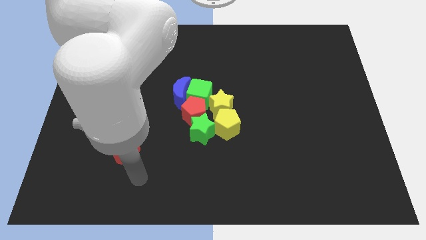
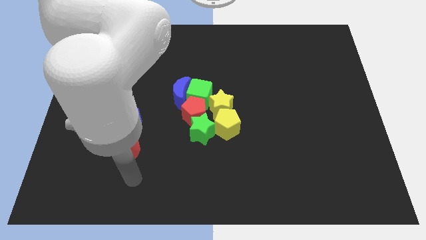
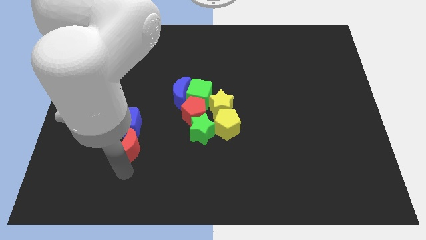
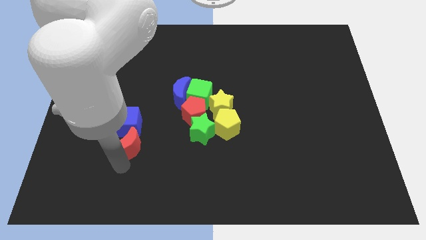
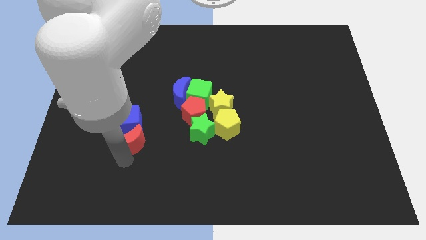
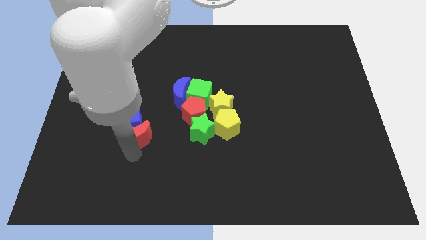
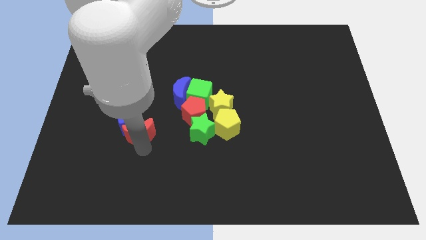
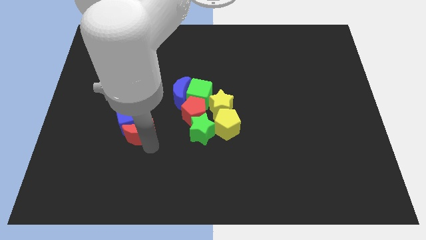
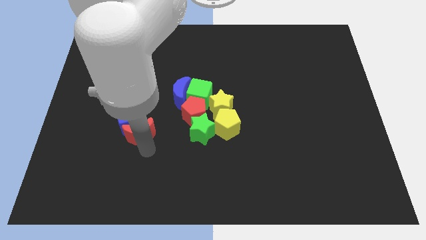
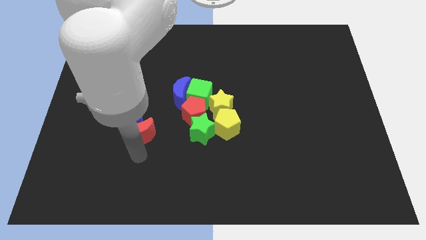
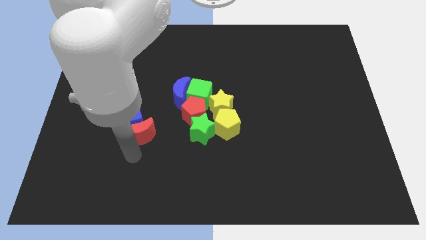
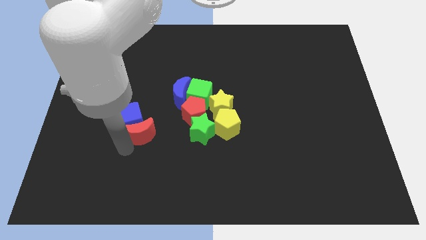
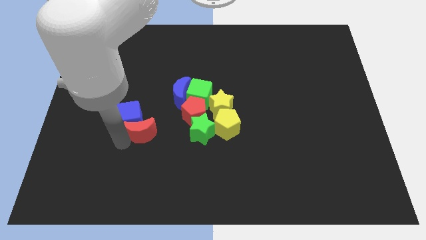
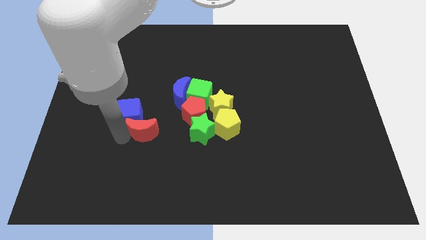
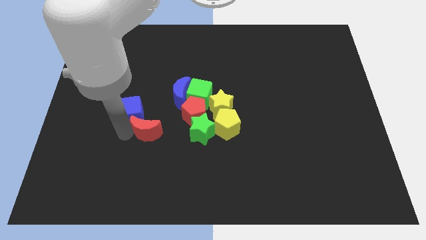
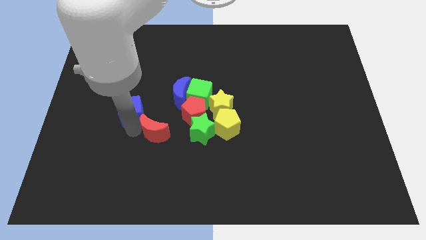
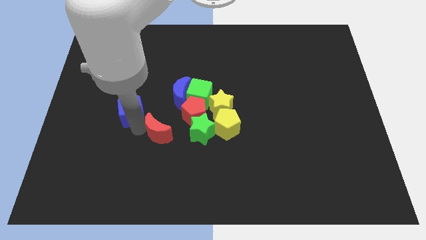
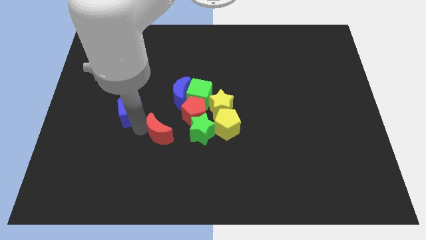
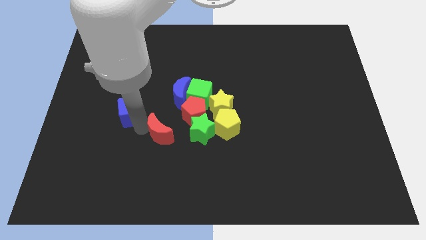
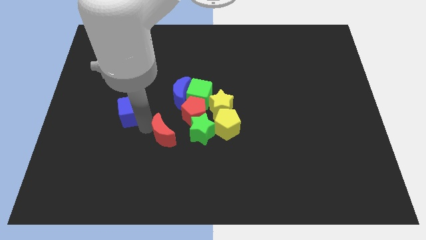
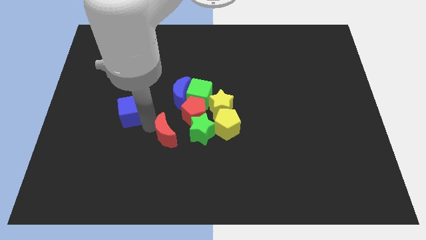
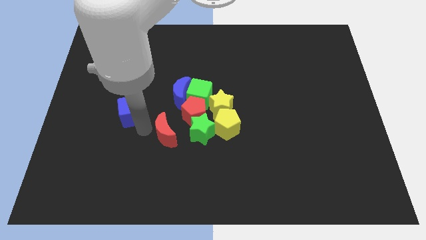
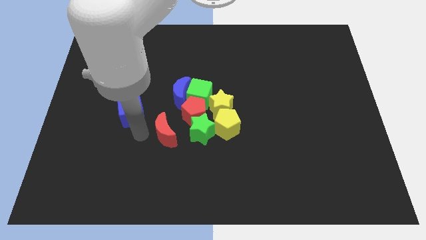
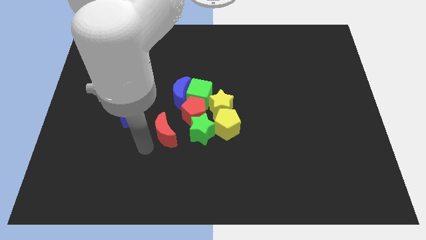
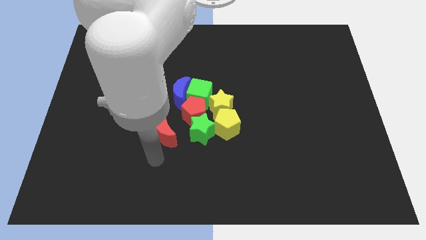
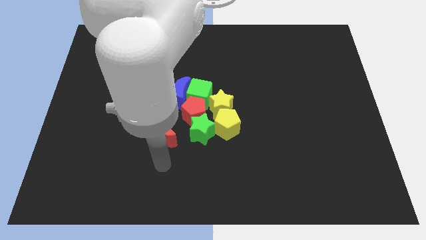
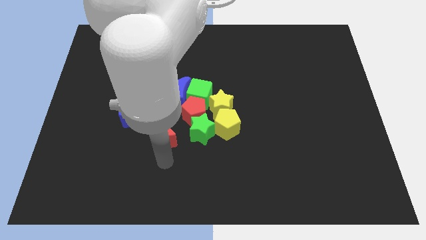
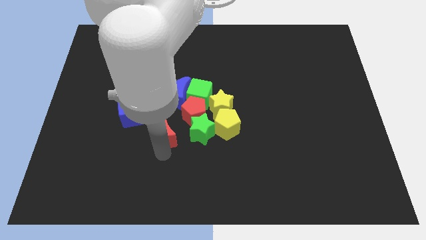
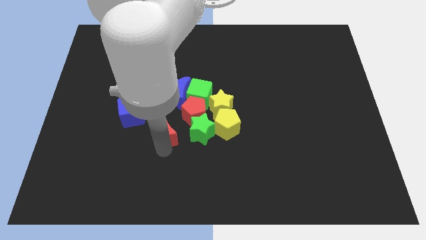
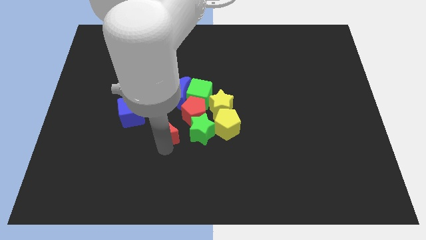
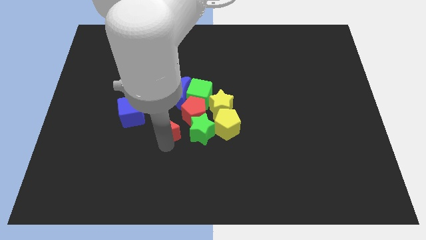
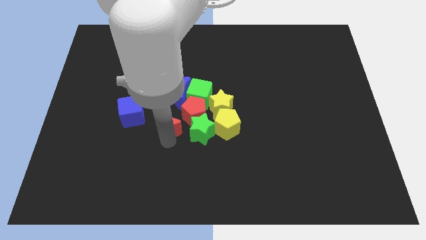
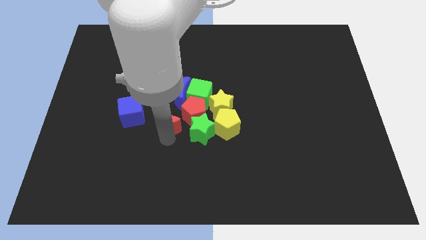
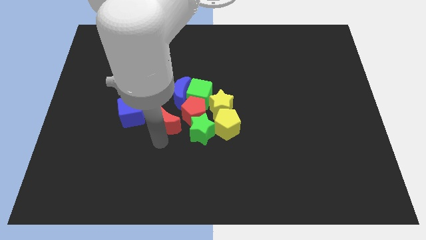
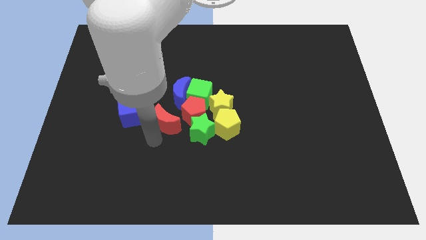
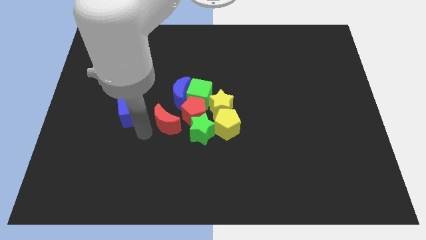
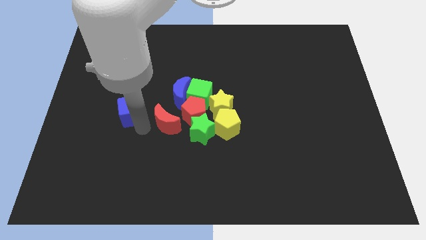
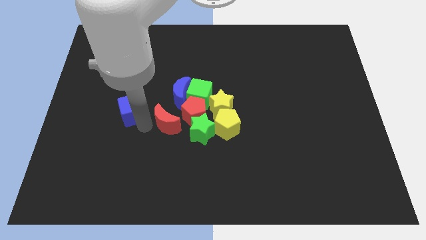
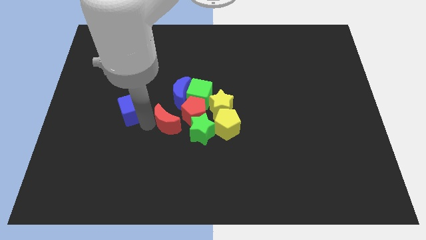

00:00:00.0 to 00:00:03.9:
push the red moon close to the group of blocks

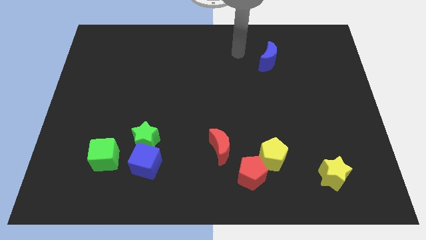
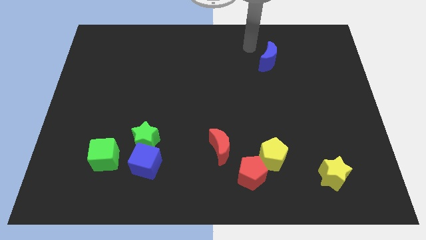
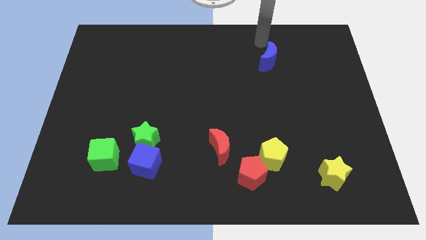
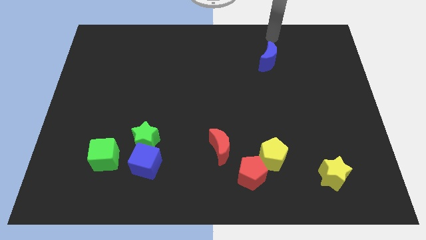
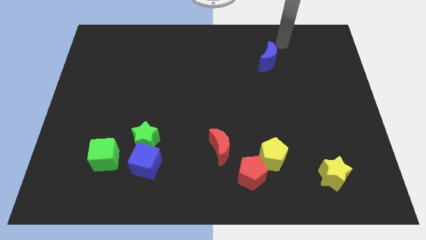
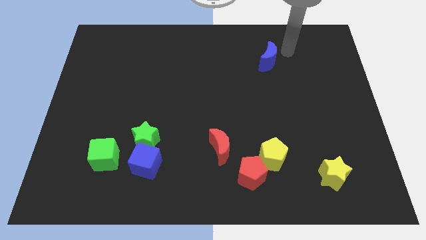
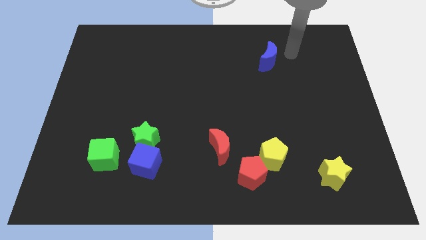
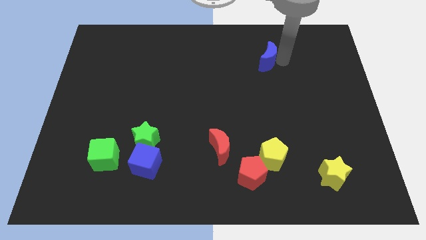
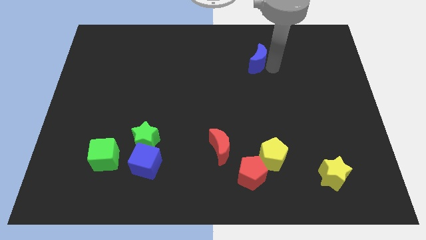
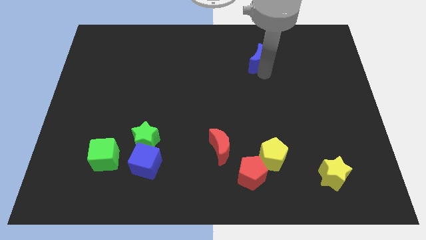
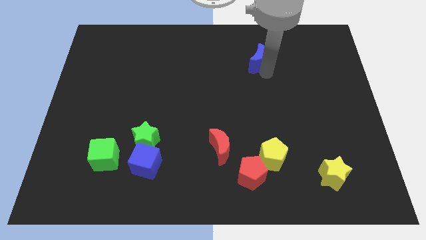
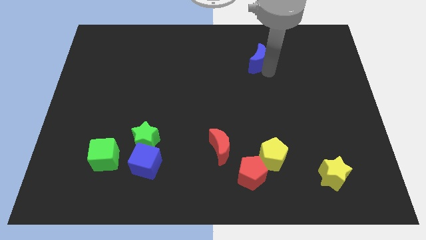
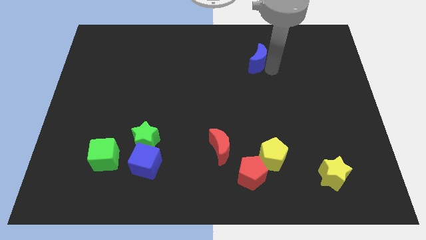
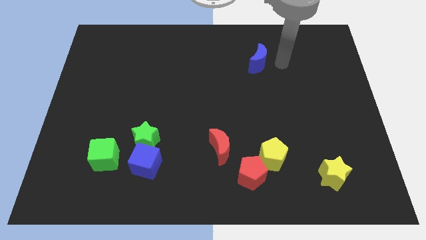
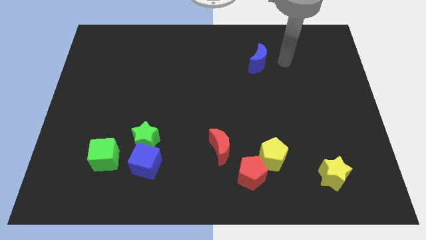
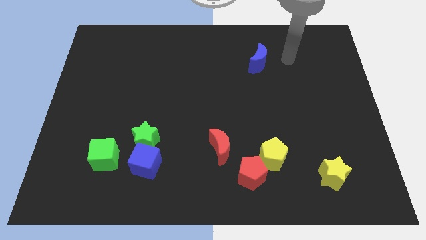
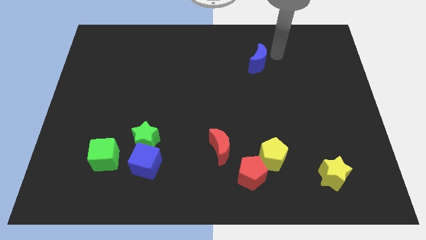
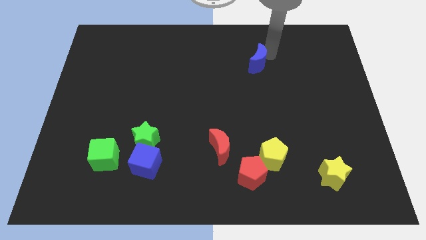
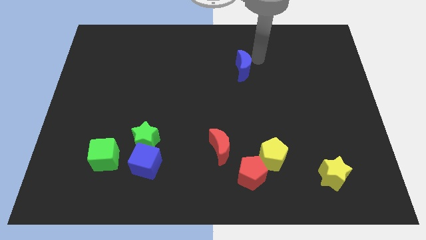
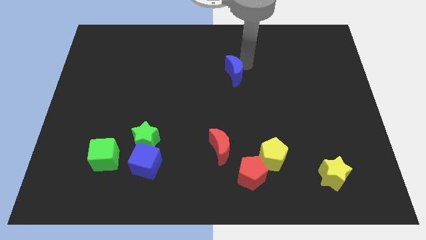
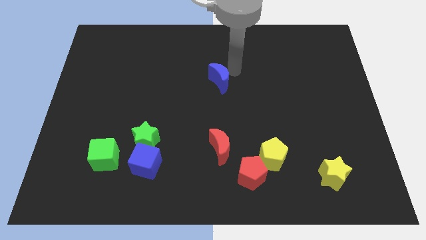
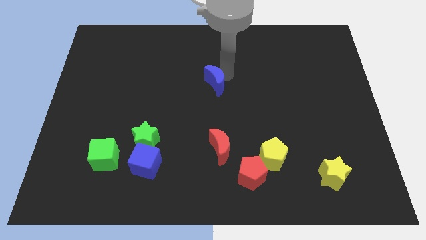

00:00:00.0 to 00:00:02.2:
move the blue crescent above the red crescent

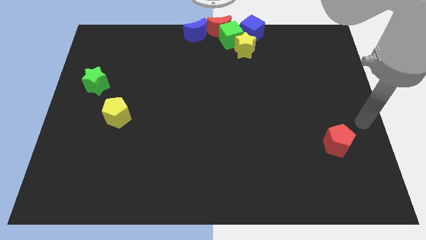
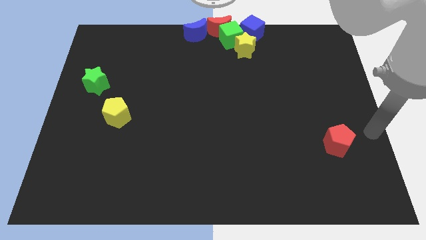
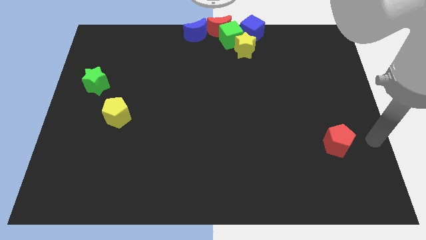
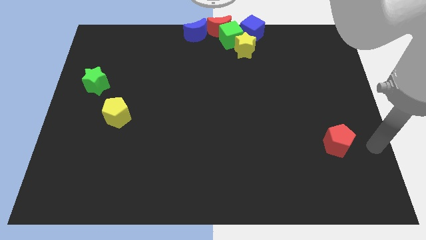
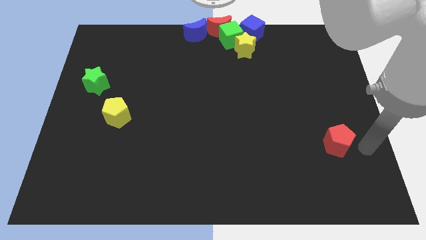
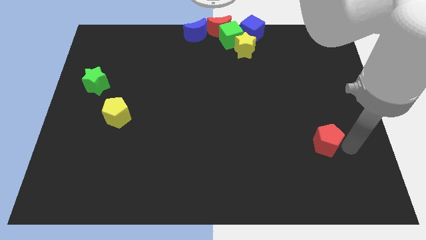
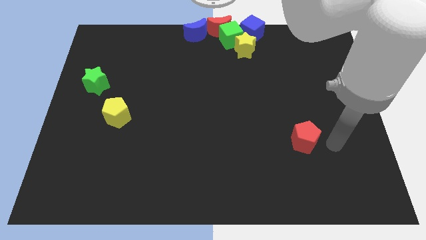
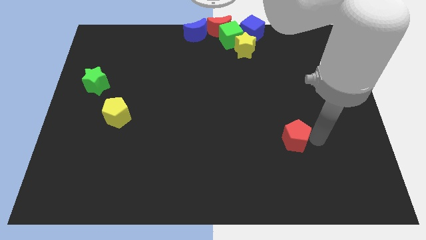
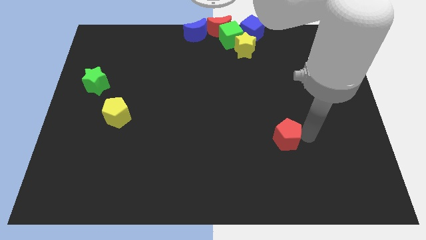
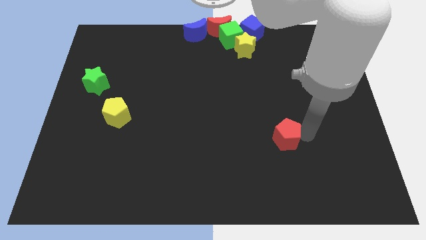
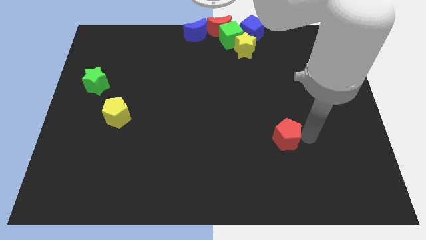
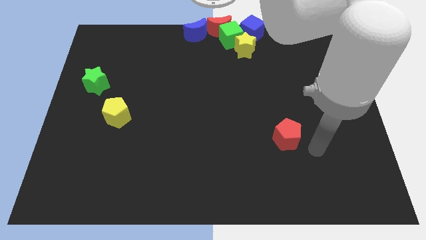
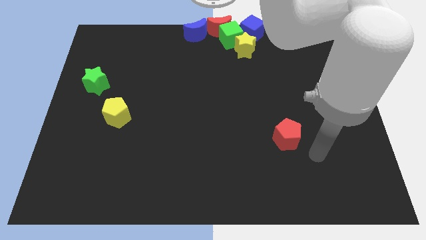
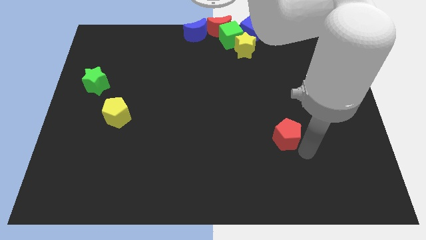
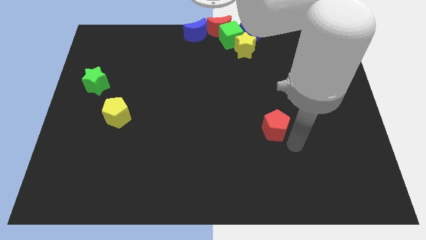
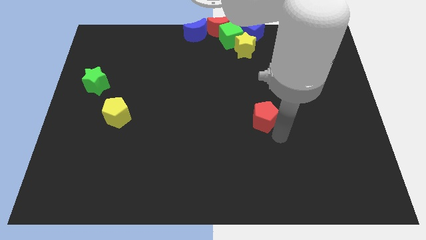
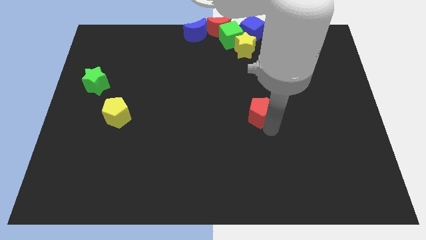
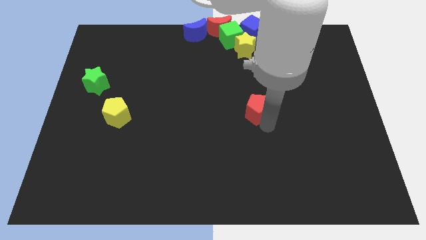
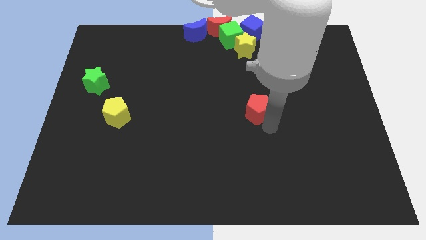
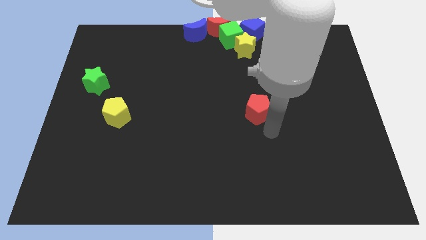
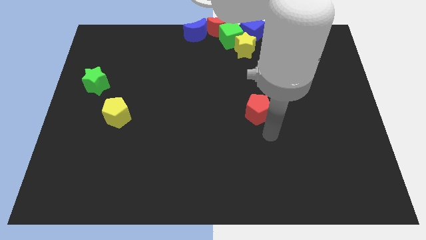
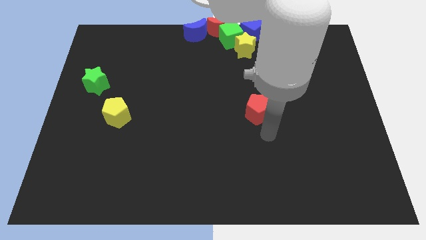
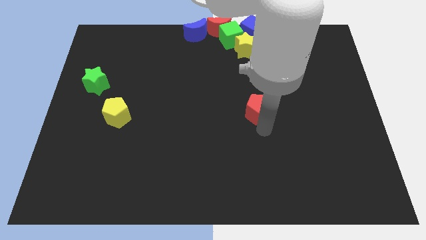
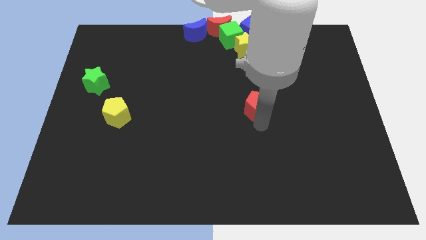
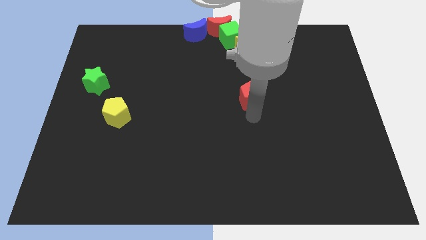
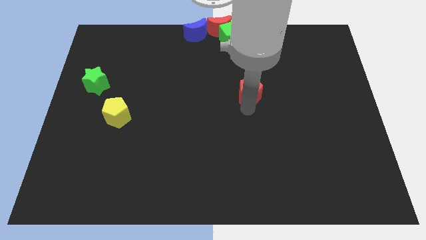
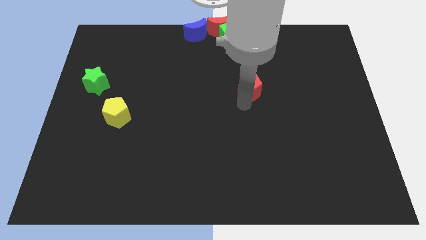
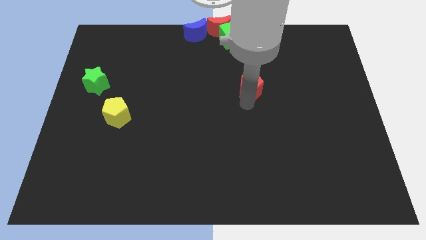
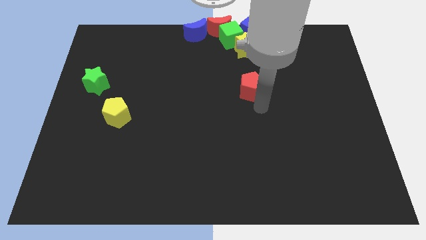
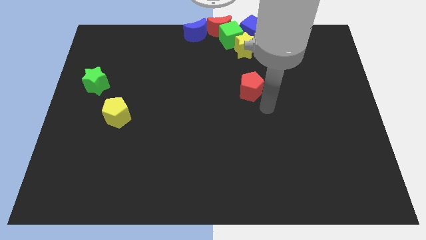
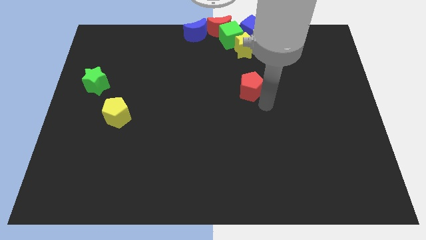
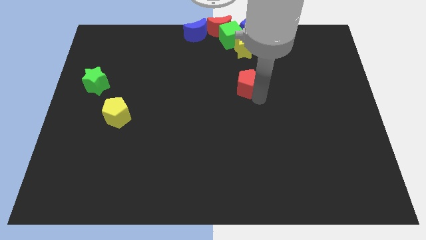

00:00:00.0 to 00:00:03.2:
place red pentagon vertical to yellow star
